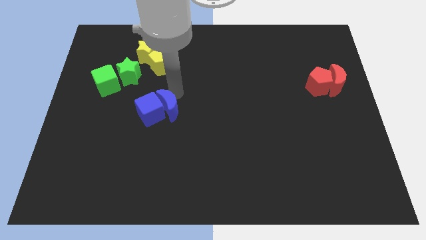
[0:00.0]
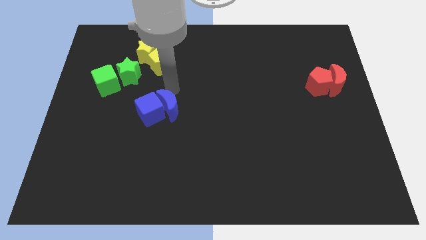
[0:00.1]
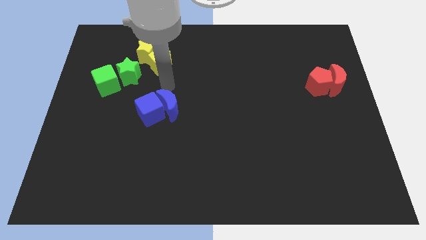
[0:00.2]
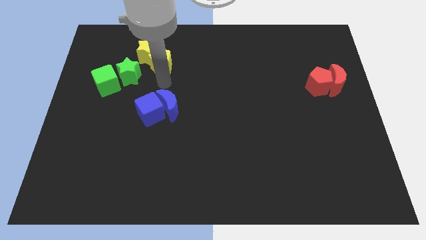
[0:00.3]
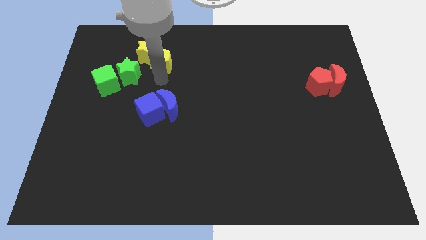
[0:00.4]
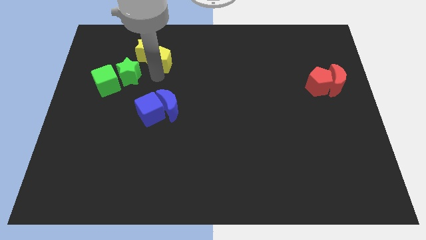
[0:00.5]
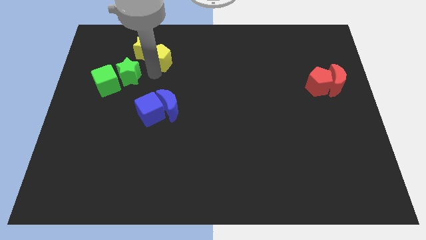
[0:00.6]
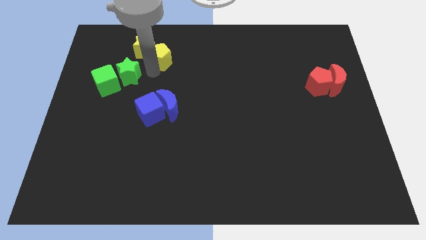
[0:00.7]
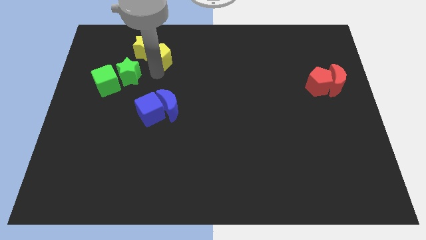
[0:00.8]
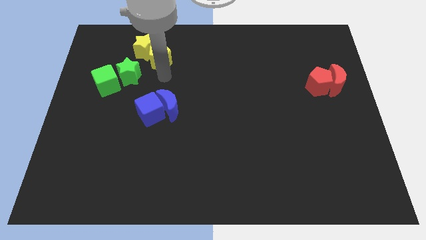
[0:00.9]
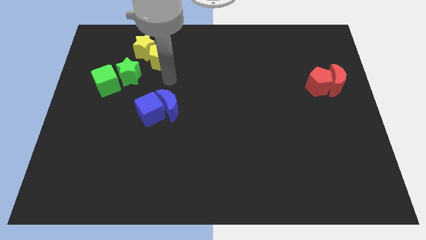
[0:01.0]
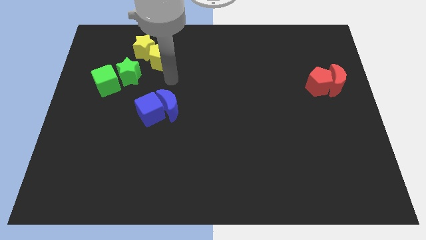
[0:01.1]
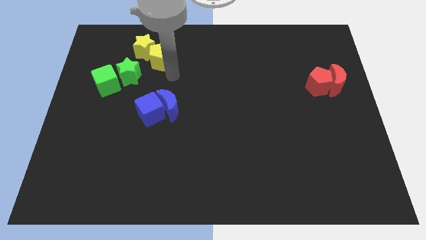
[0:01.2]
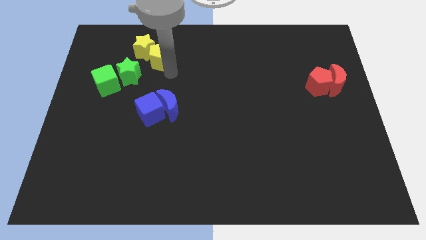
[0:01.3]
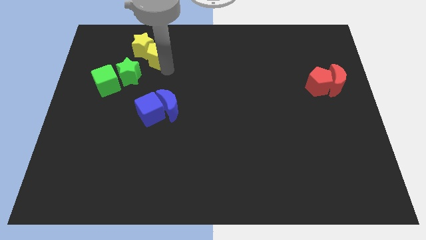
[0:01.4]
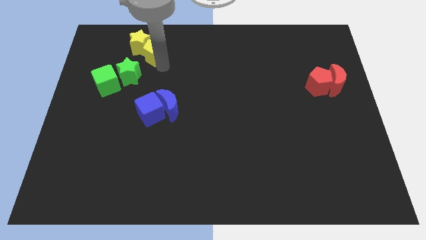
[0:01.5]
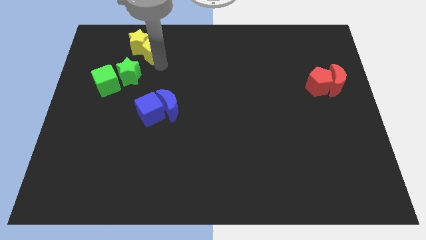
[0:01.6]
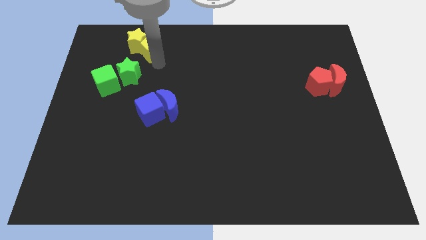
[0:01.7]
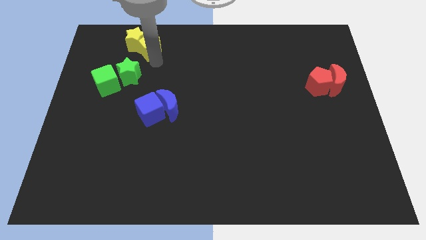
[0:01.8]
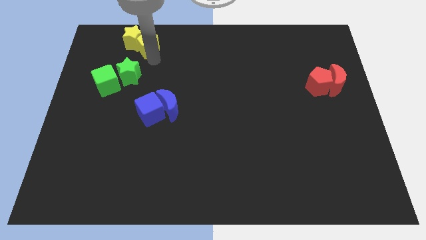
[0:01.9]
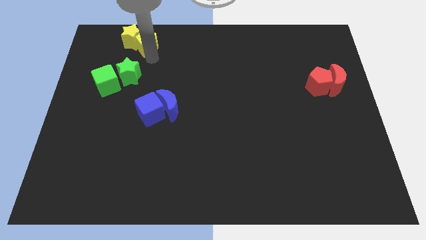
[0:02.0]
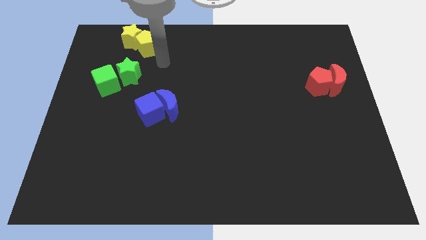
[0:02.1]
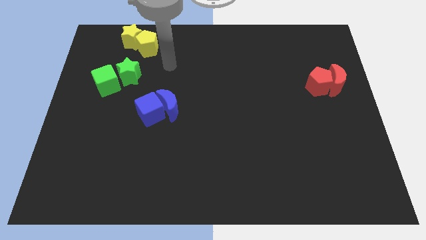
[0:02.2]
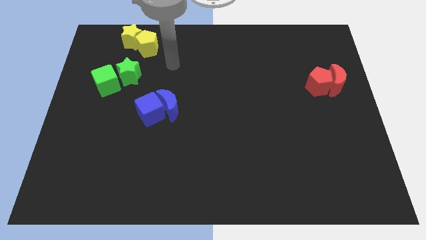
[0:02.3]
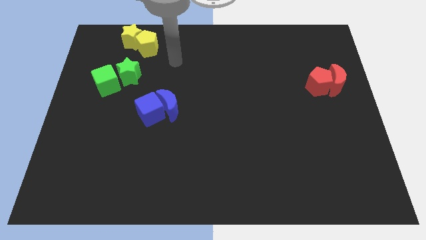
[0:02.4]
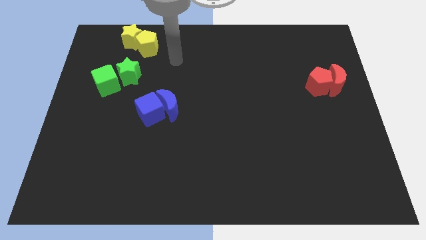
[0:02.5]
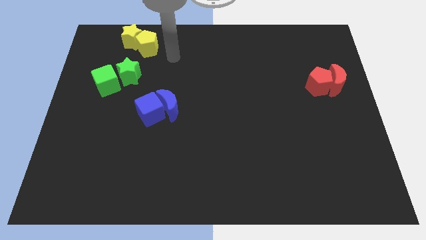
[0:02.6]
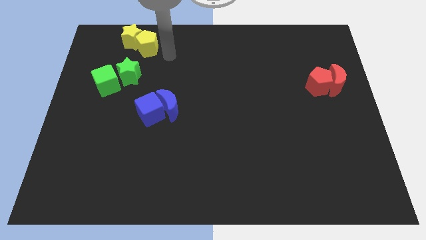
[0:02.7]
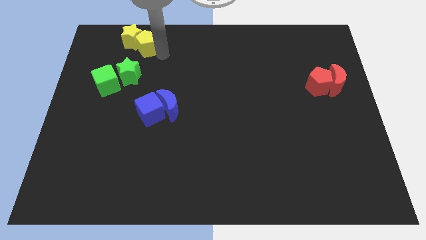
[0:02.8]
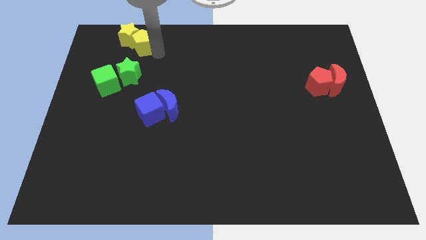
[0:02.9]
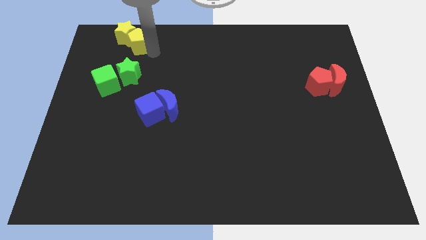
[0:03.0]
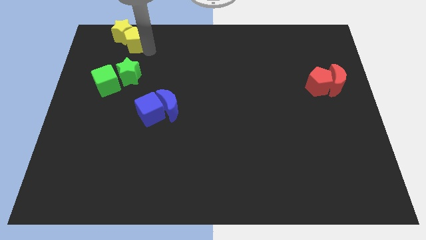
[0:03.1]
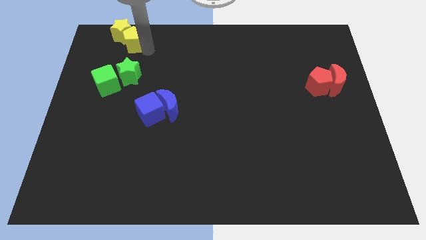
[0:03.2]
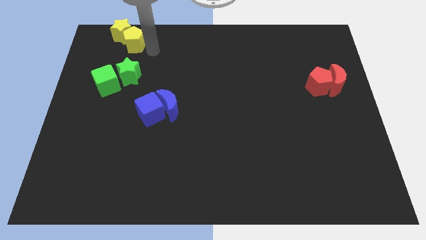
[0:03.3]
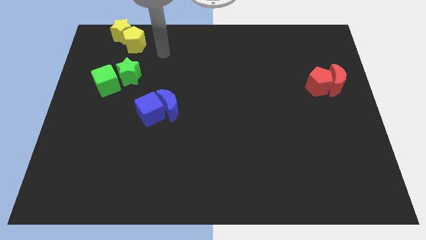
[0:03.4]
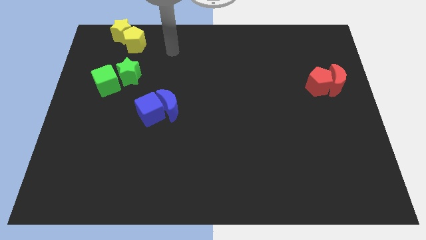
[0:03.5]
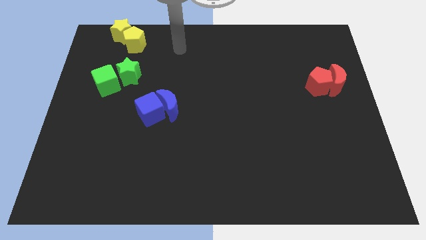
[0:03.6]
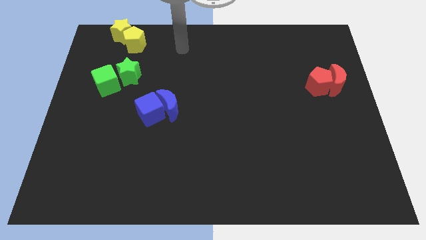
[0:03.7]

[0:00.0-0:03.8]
move both the yellow blocks towards the top right side of the board

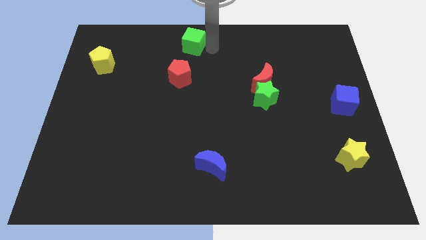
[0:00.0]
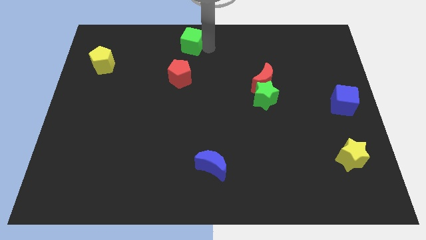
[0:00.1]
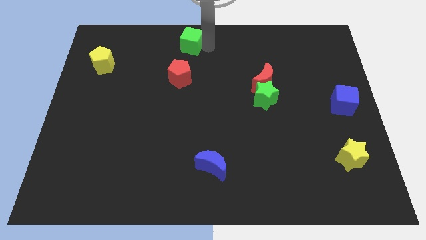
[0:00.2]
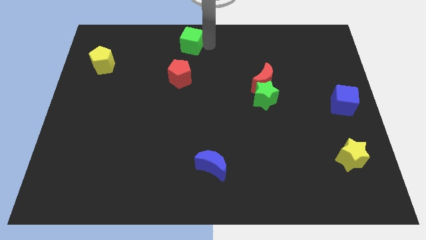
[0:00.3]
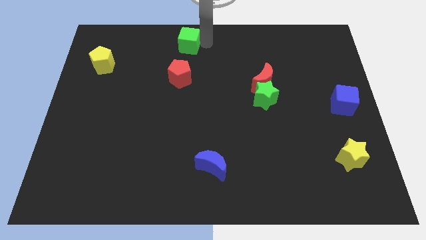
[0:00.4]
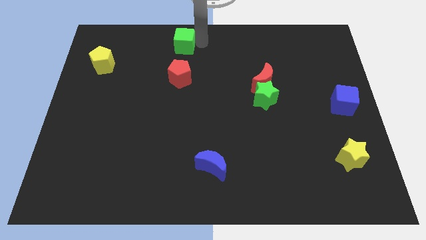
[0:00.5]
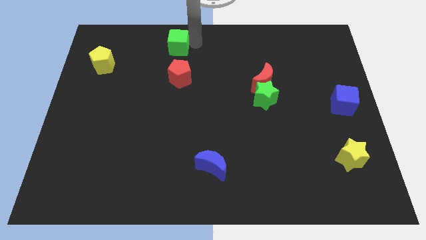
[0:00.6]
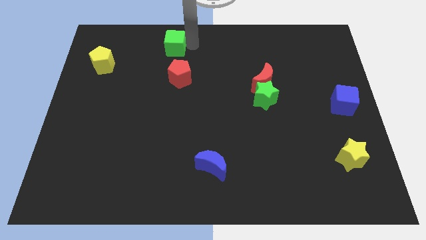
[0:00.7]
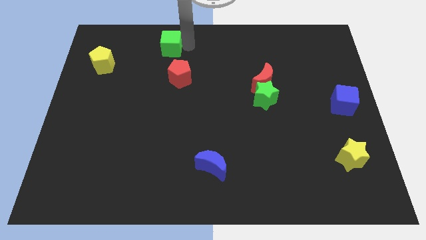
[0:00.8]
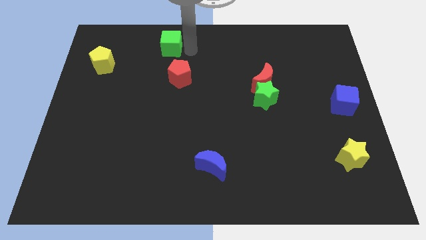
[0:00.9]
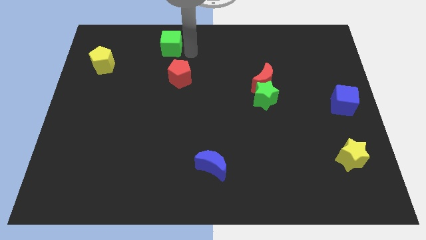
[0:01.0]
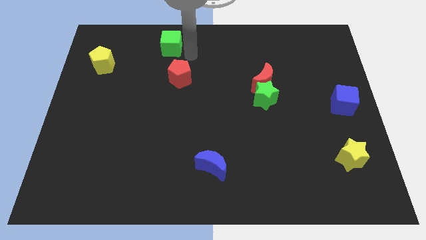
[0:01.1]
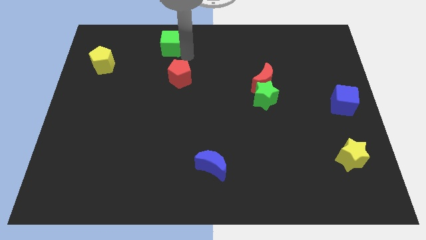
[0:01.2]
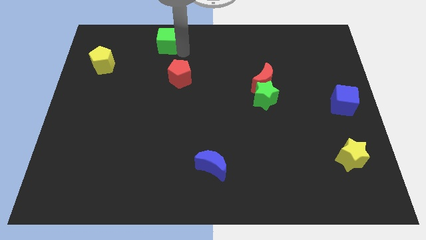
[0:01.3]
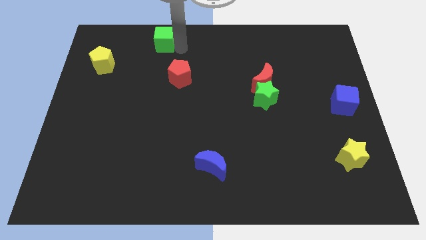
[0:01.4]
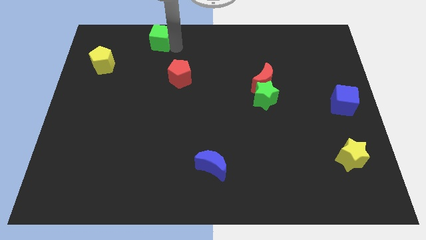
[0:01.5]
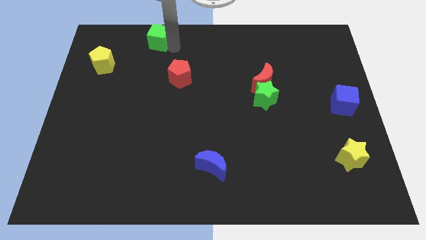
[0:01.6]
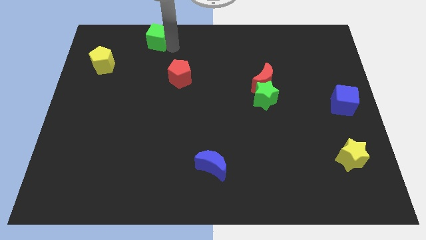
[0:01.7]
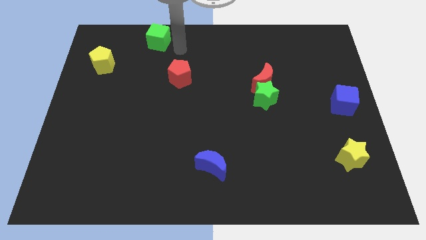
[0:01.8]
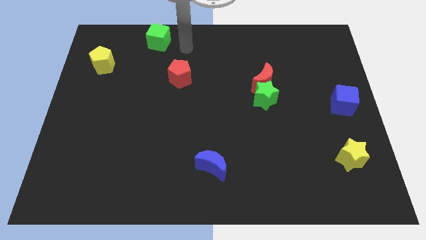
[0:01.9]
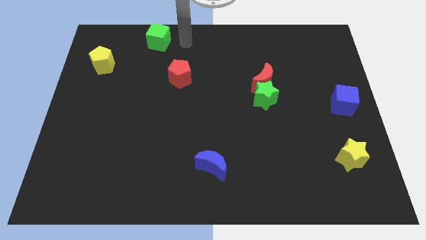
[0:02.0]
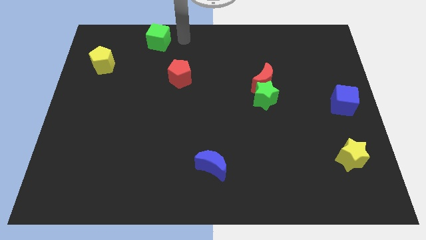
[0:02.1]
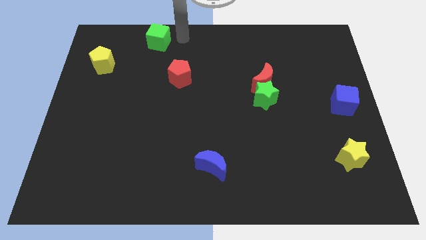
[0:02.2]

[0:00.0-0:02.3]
push the green cube to the left side of the board

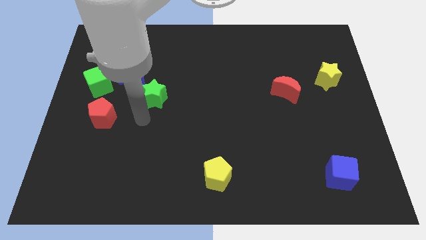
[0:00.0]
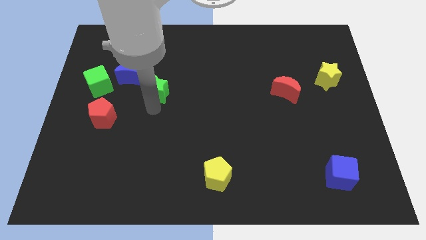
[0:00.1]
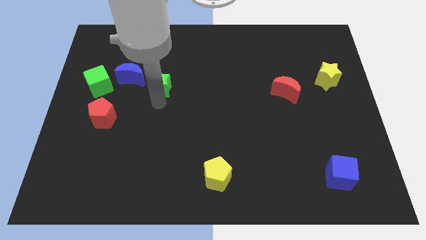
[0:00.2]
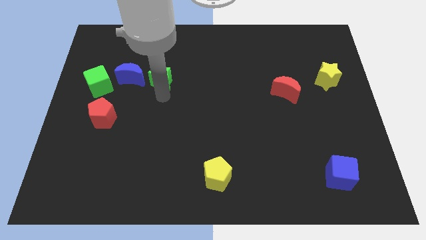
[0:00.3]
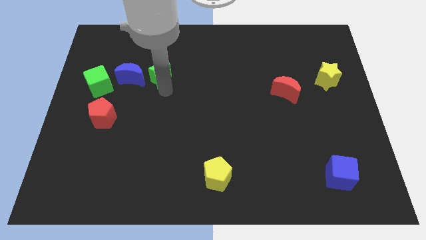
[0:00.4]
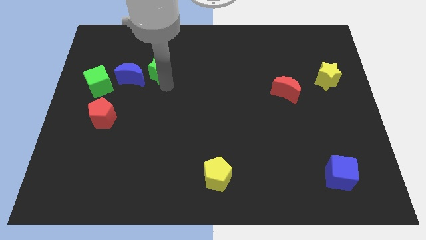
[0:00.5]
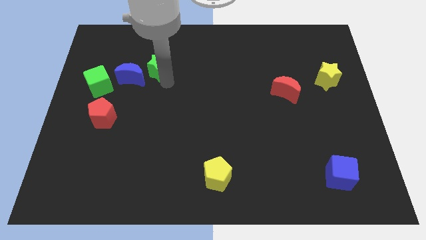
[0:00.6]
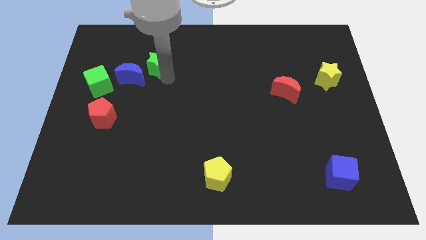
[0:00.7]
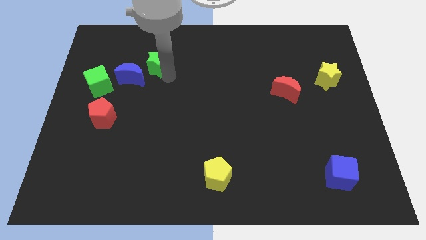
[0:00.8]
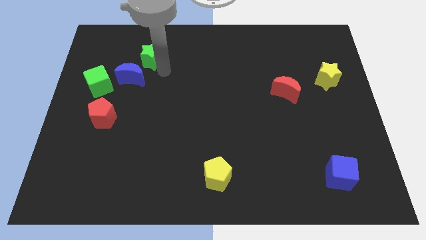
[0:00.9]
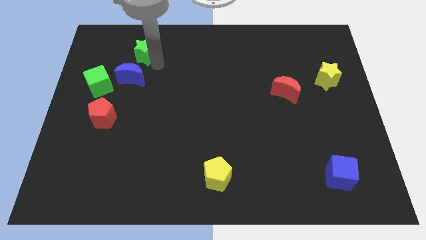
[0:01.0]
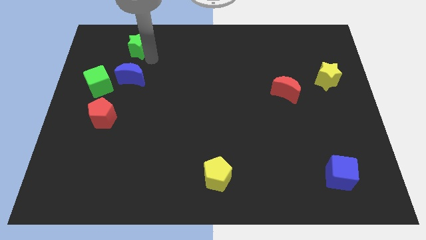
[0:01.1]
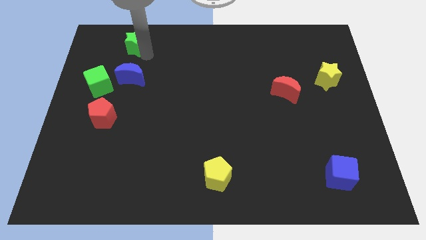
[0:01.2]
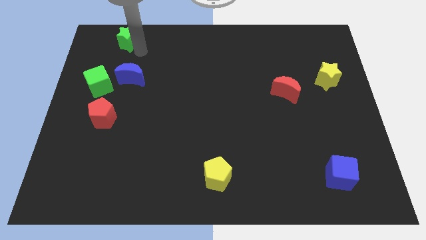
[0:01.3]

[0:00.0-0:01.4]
place the green star above the blue moon

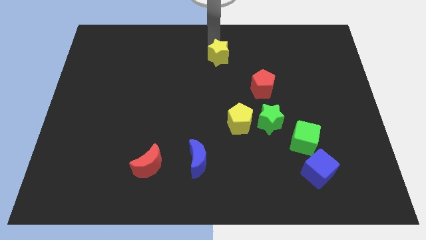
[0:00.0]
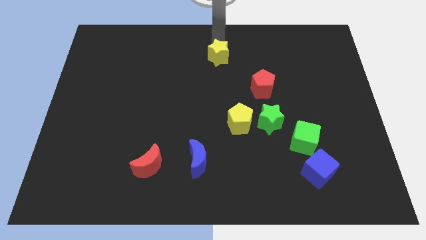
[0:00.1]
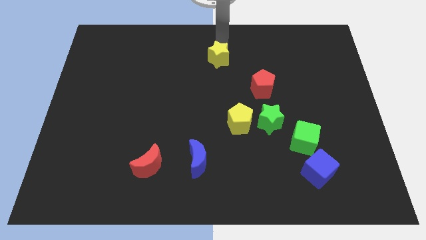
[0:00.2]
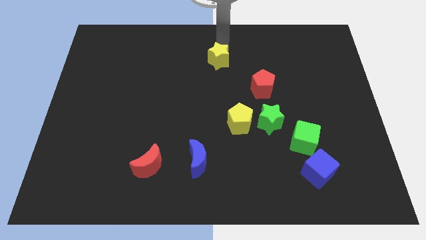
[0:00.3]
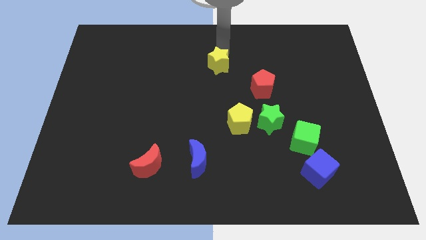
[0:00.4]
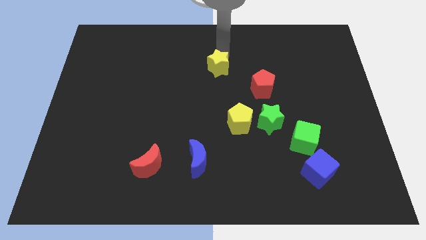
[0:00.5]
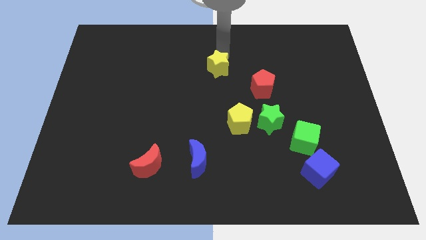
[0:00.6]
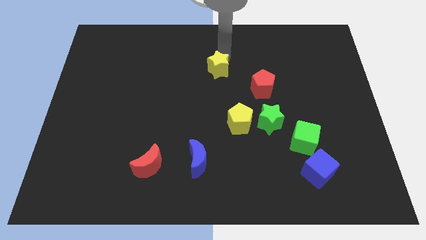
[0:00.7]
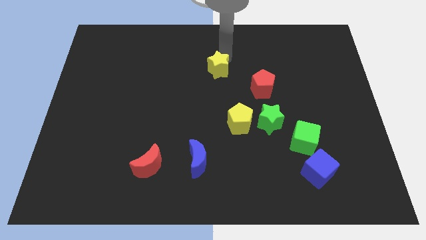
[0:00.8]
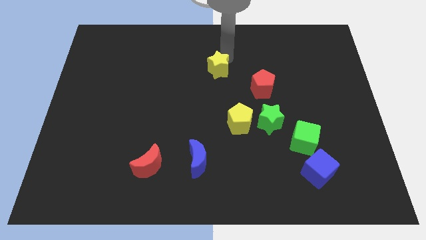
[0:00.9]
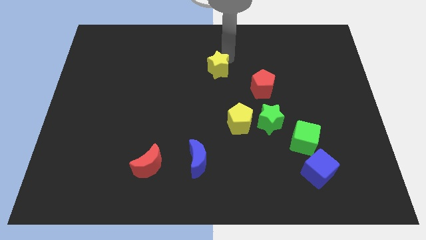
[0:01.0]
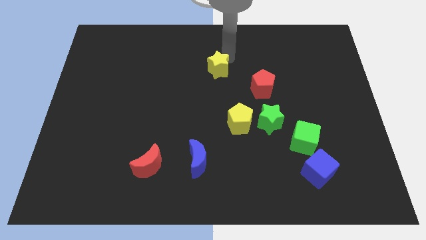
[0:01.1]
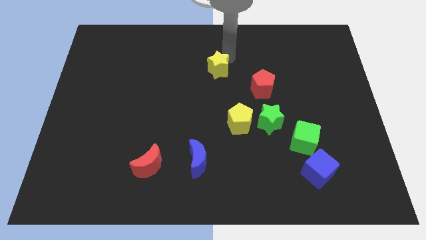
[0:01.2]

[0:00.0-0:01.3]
slide the yellow star slightly downwards

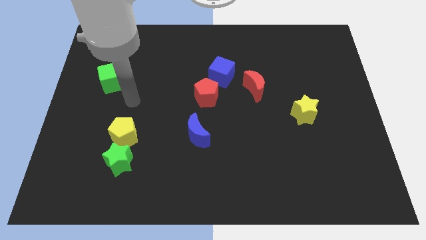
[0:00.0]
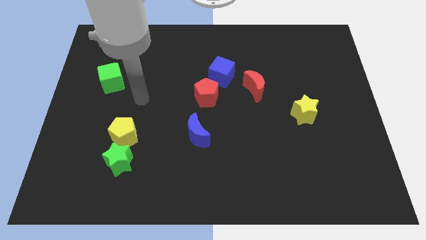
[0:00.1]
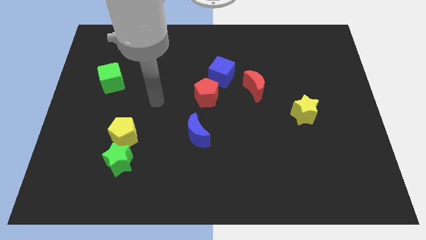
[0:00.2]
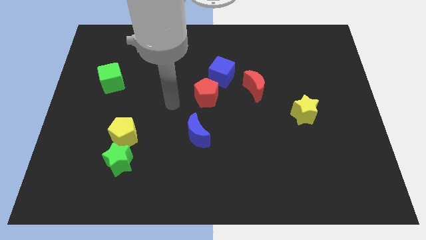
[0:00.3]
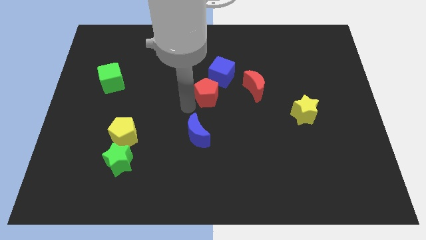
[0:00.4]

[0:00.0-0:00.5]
place the arm to the left of red pentagon
